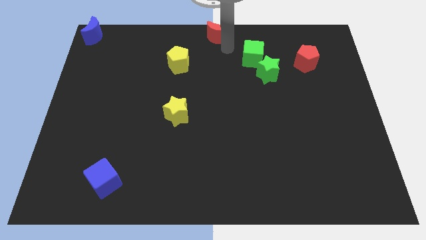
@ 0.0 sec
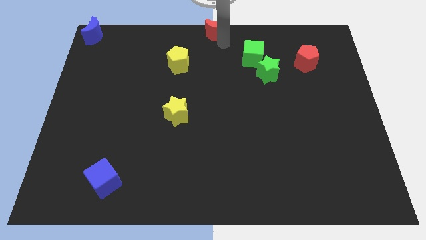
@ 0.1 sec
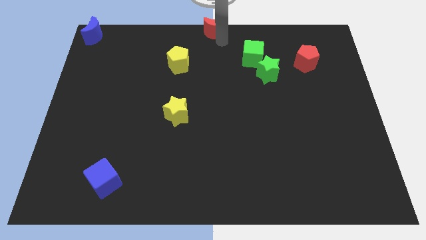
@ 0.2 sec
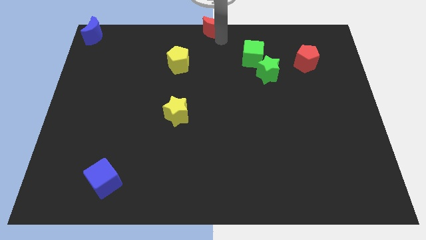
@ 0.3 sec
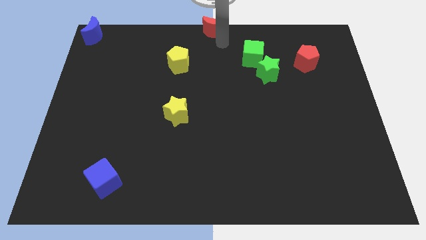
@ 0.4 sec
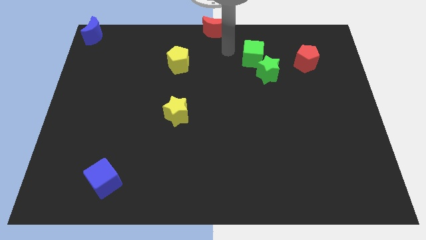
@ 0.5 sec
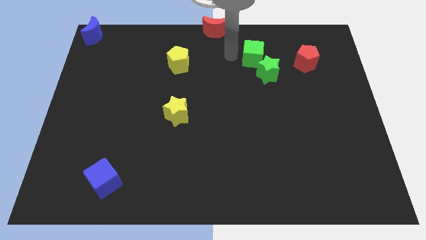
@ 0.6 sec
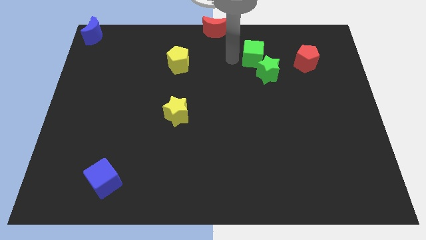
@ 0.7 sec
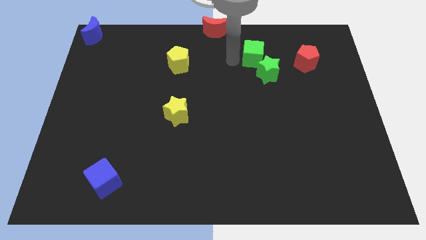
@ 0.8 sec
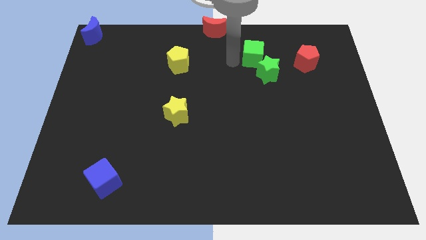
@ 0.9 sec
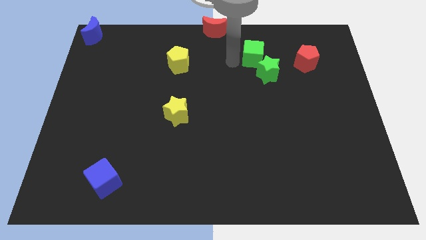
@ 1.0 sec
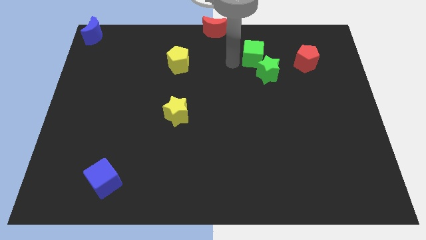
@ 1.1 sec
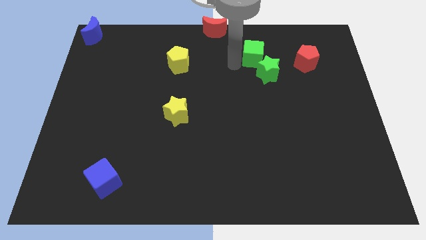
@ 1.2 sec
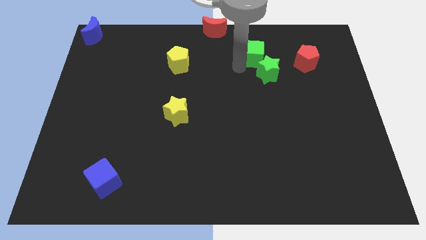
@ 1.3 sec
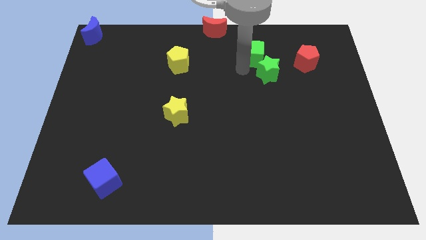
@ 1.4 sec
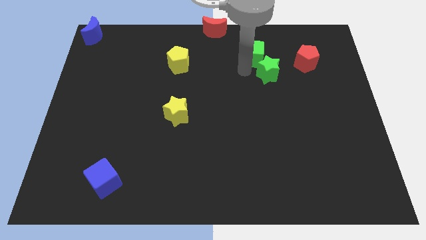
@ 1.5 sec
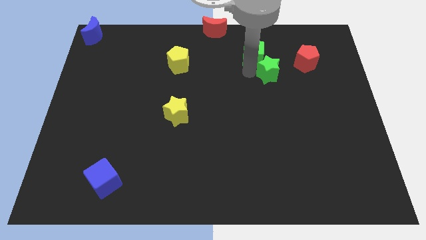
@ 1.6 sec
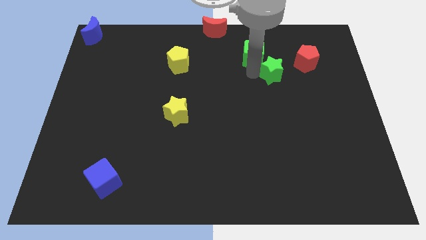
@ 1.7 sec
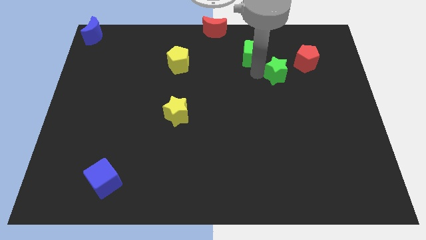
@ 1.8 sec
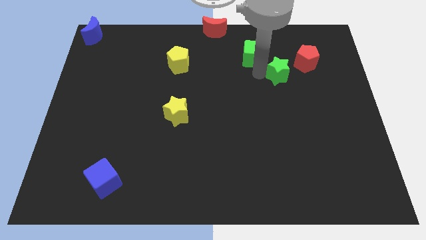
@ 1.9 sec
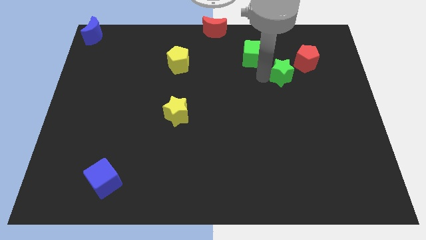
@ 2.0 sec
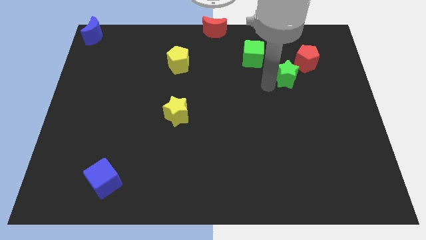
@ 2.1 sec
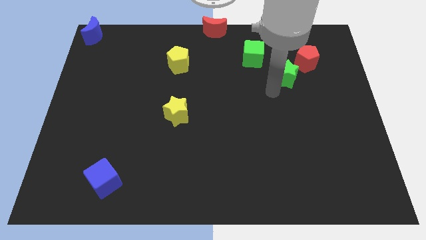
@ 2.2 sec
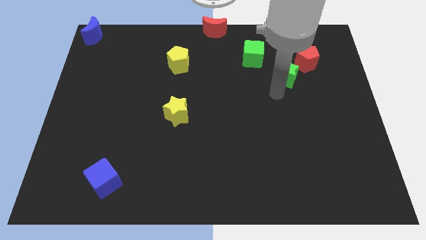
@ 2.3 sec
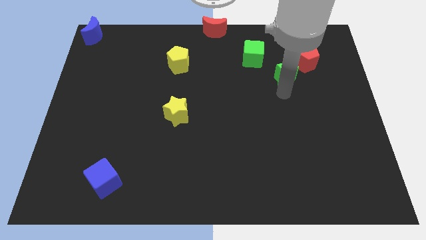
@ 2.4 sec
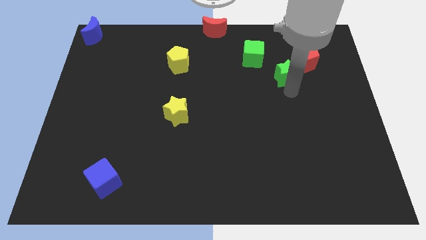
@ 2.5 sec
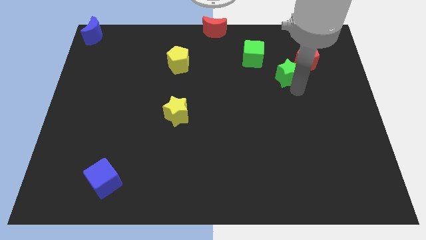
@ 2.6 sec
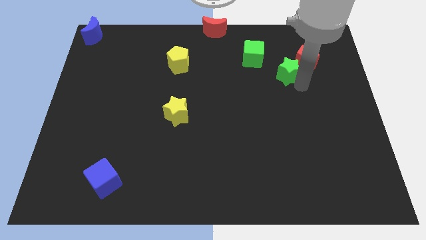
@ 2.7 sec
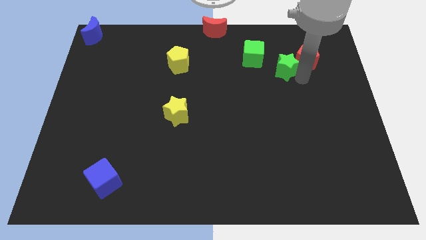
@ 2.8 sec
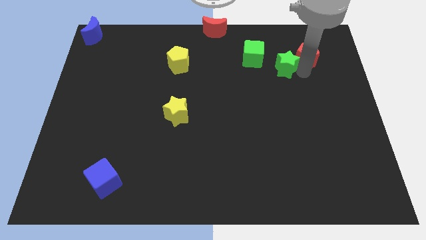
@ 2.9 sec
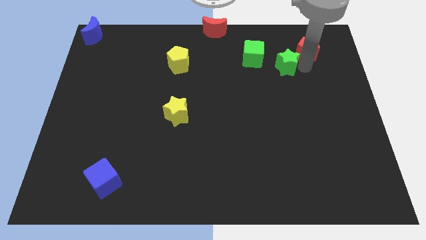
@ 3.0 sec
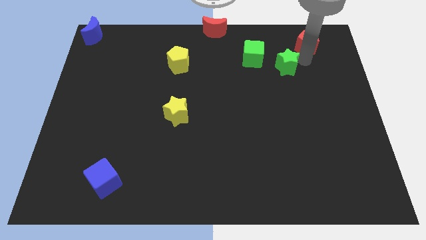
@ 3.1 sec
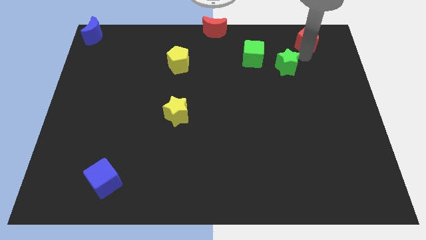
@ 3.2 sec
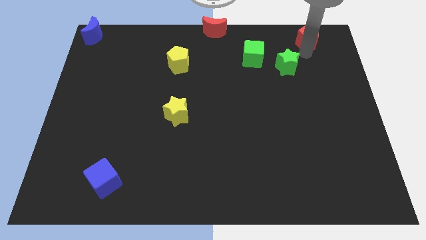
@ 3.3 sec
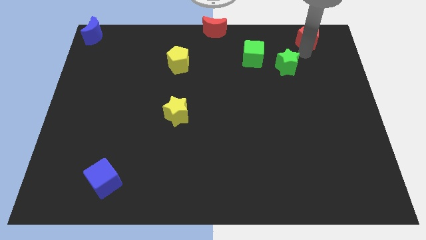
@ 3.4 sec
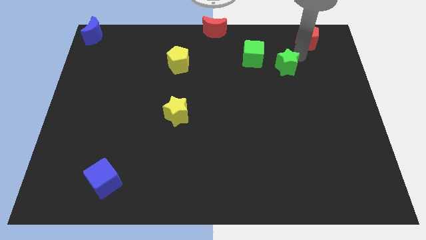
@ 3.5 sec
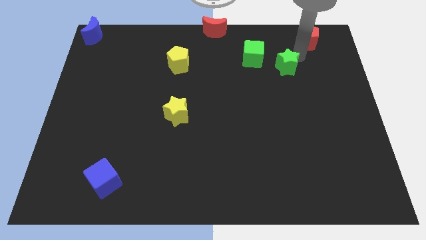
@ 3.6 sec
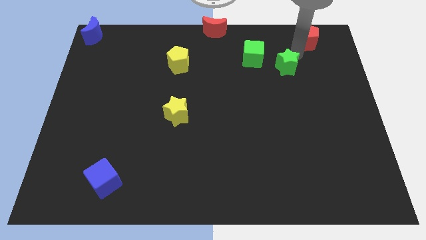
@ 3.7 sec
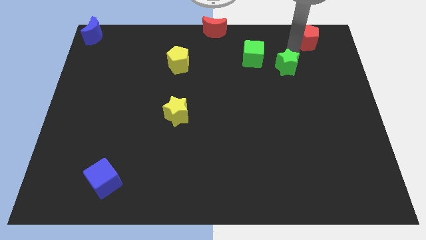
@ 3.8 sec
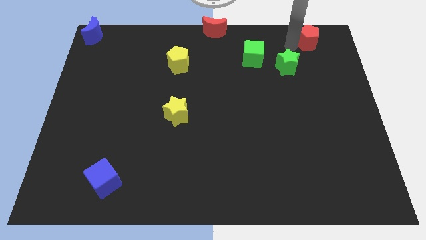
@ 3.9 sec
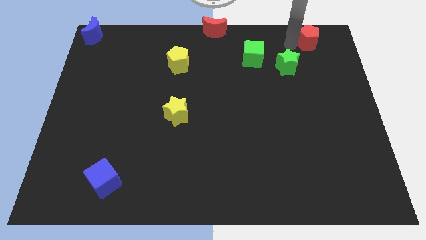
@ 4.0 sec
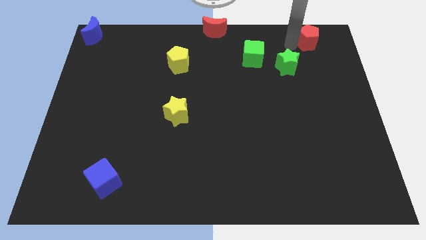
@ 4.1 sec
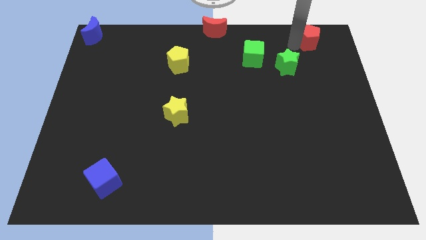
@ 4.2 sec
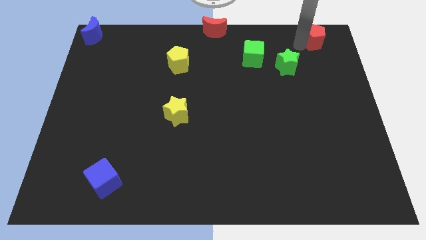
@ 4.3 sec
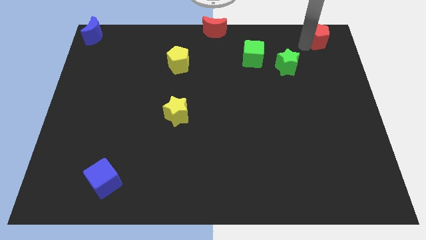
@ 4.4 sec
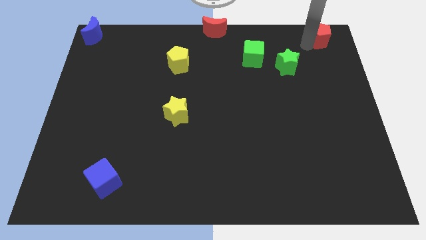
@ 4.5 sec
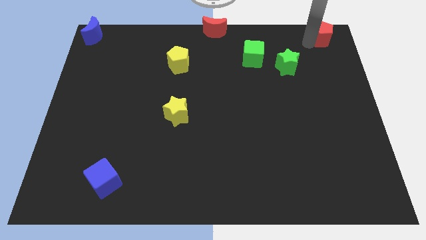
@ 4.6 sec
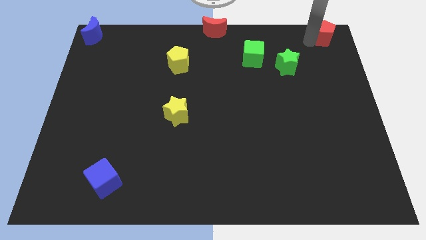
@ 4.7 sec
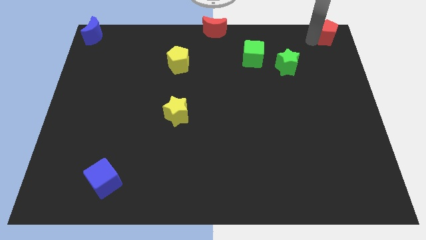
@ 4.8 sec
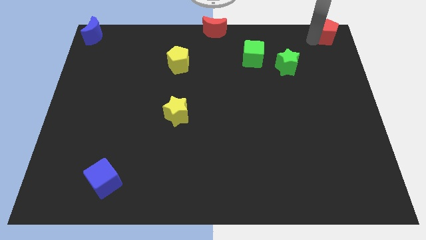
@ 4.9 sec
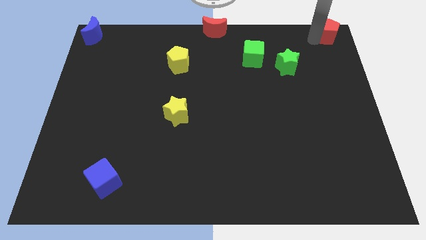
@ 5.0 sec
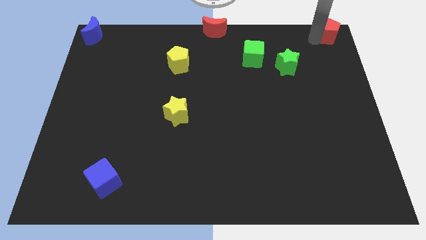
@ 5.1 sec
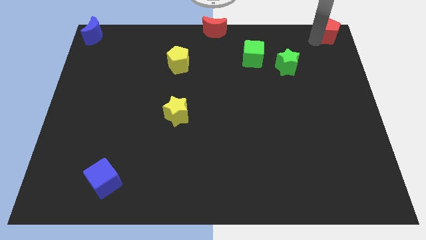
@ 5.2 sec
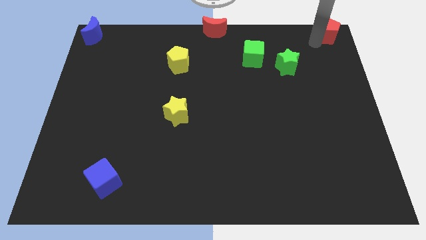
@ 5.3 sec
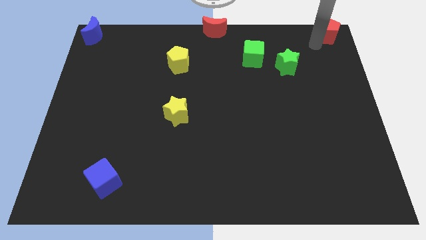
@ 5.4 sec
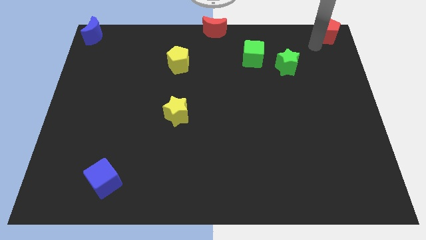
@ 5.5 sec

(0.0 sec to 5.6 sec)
push the red pentagon to the top right corner

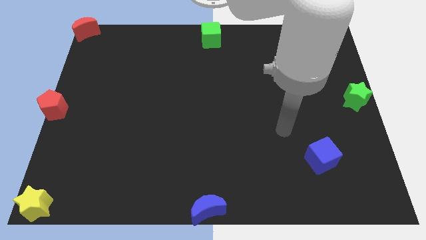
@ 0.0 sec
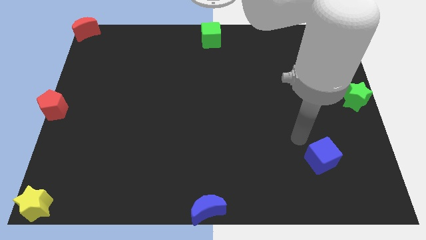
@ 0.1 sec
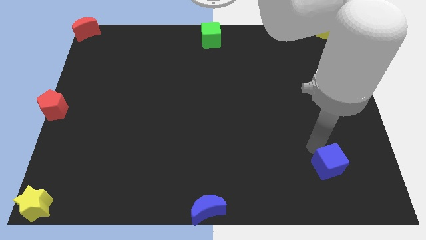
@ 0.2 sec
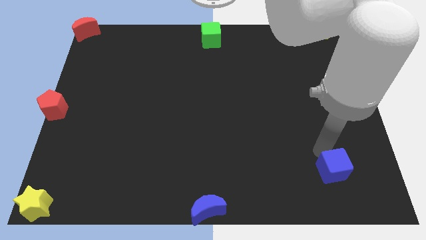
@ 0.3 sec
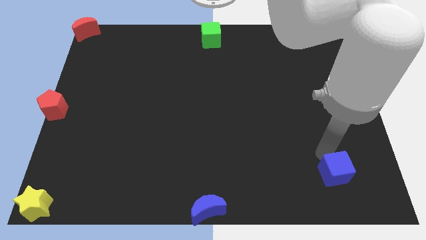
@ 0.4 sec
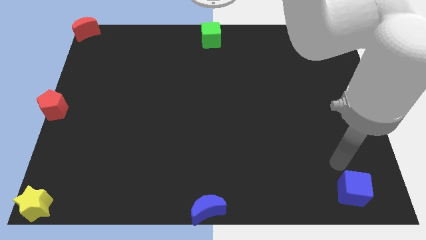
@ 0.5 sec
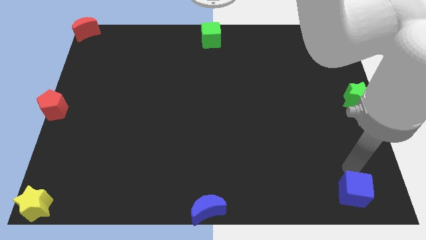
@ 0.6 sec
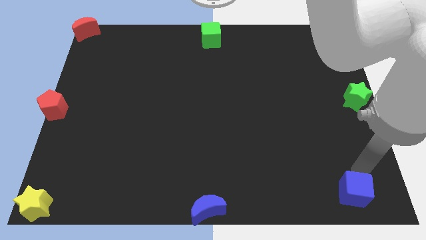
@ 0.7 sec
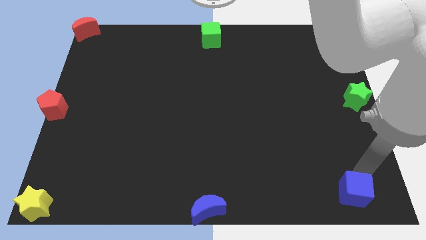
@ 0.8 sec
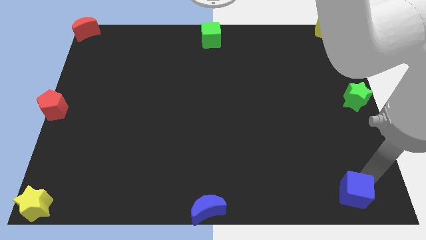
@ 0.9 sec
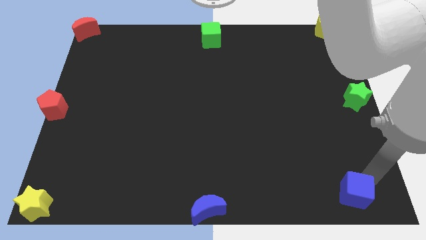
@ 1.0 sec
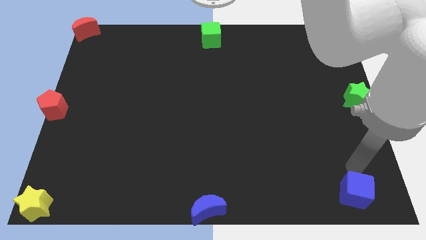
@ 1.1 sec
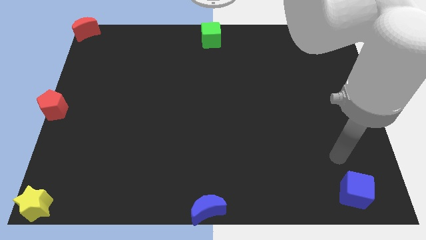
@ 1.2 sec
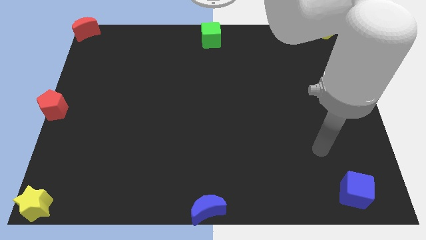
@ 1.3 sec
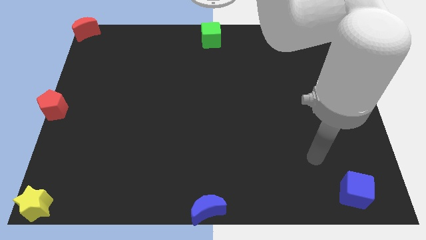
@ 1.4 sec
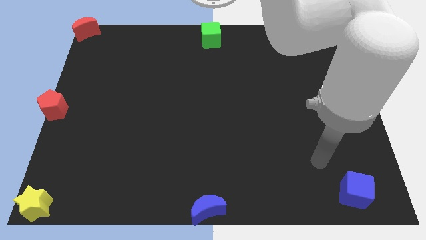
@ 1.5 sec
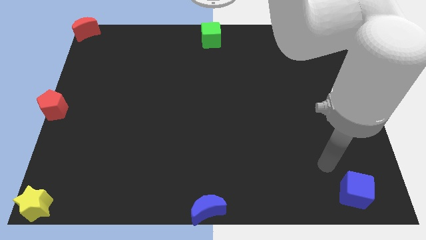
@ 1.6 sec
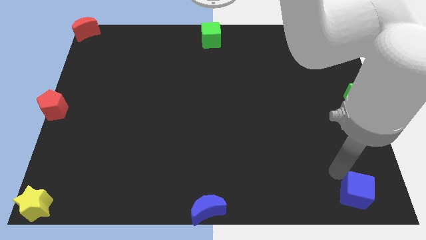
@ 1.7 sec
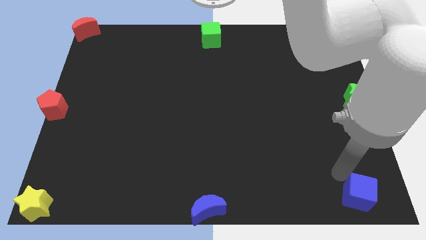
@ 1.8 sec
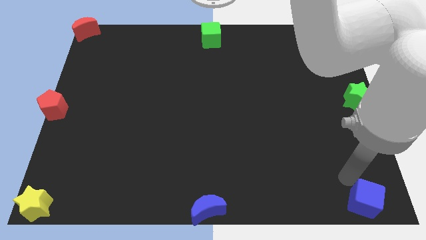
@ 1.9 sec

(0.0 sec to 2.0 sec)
move the blue cube to the bottom right

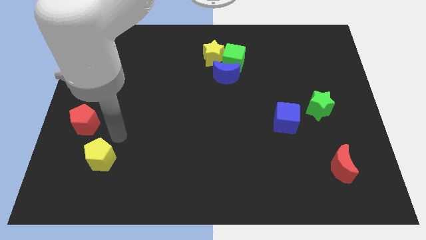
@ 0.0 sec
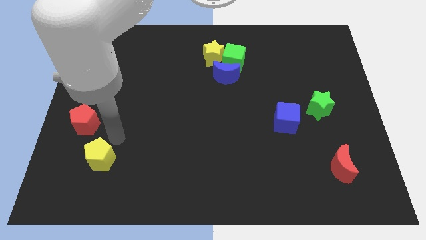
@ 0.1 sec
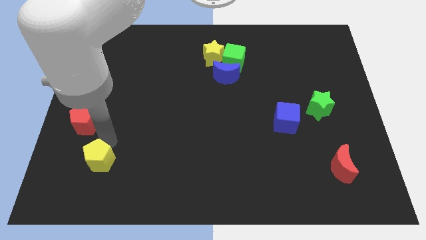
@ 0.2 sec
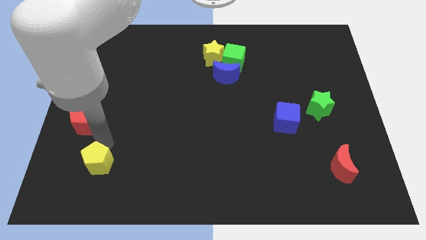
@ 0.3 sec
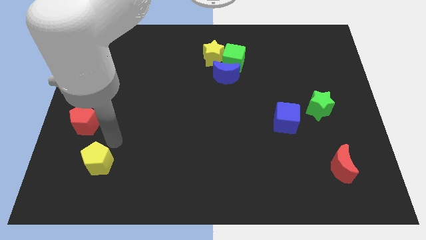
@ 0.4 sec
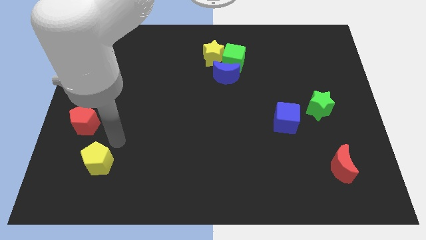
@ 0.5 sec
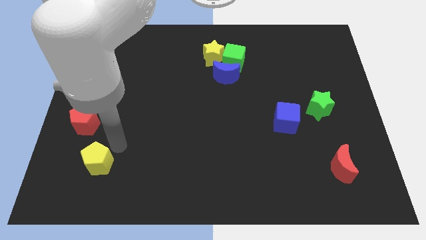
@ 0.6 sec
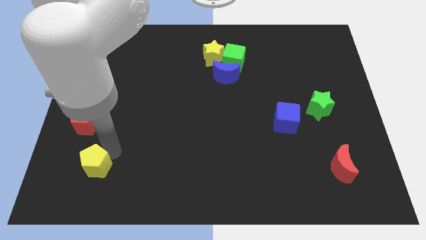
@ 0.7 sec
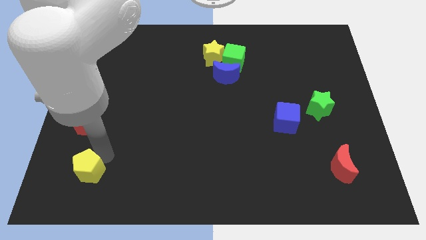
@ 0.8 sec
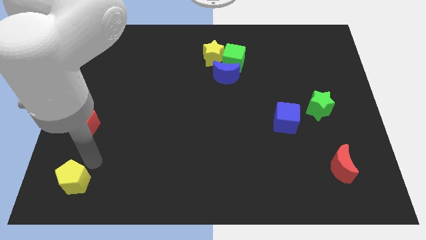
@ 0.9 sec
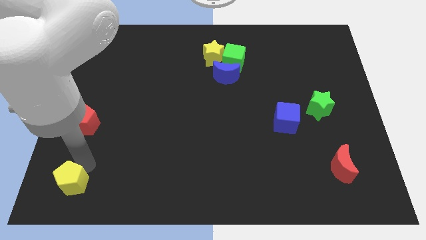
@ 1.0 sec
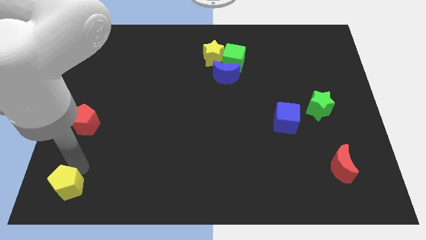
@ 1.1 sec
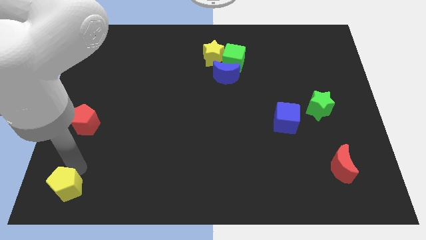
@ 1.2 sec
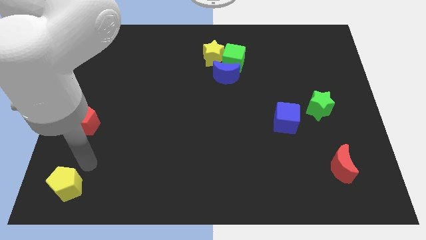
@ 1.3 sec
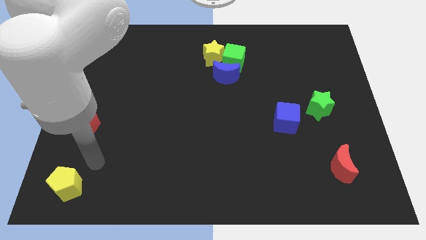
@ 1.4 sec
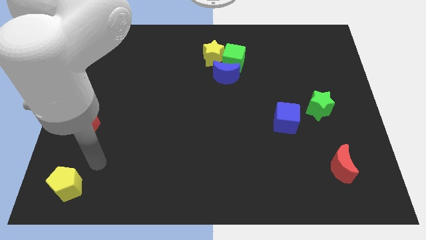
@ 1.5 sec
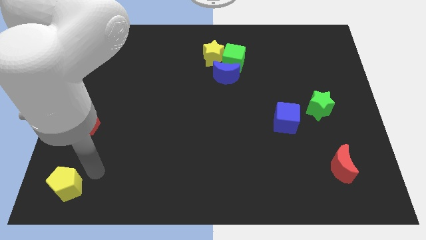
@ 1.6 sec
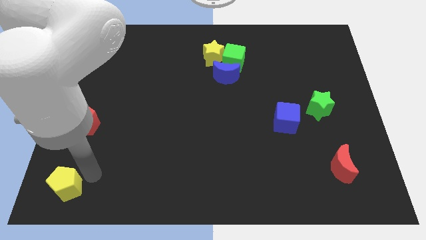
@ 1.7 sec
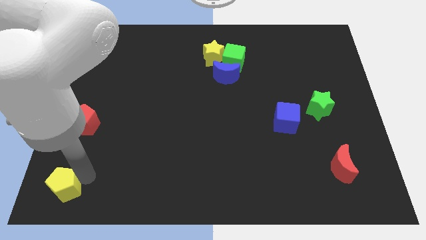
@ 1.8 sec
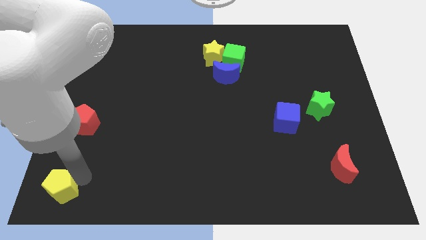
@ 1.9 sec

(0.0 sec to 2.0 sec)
put the yellow pentagon vertically below the red pentagon
